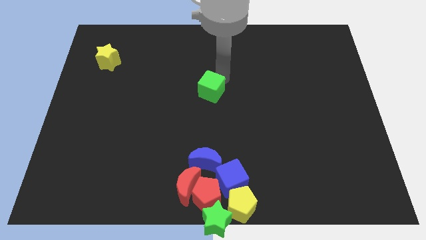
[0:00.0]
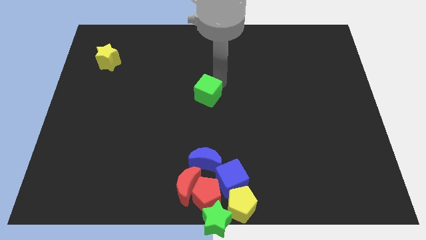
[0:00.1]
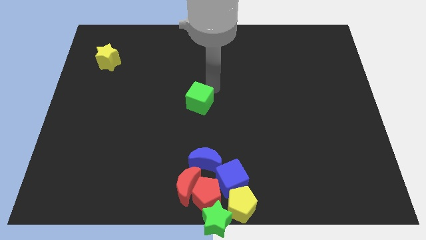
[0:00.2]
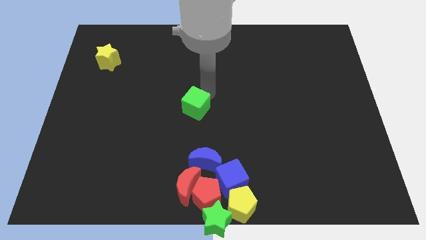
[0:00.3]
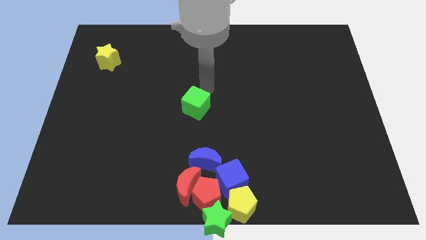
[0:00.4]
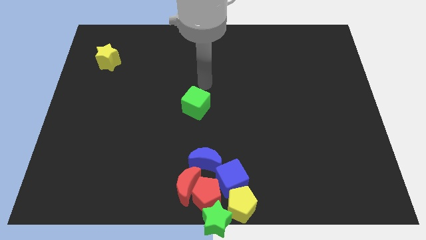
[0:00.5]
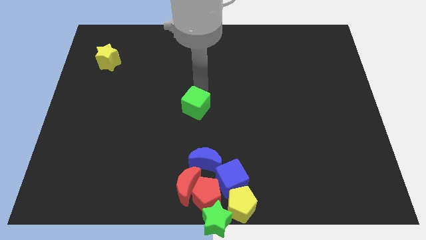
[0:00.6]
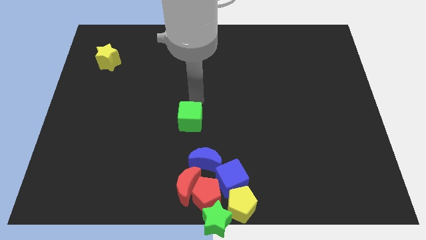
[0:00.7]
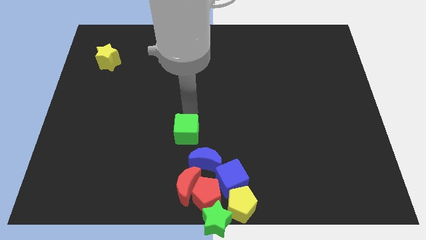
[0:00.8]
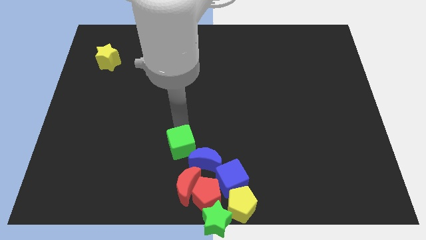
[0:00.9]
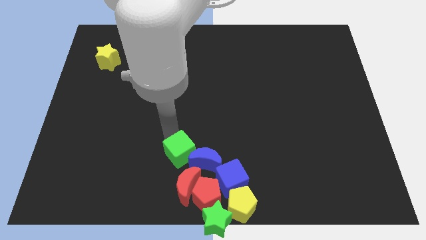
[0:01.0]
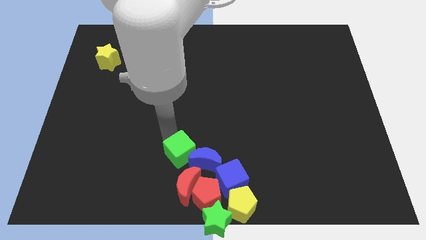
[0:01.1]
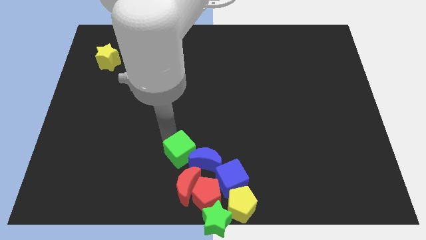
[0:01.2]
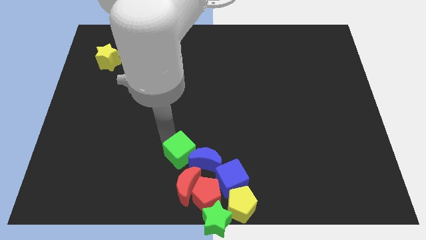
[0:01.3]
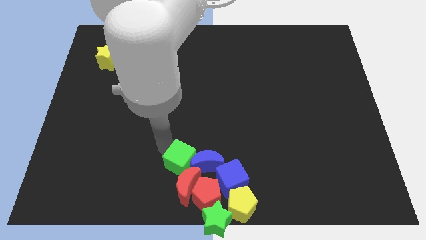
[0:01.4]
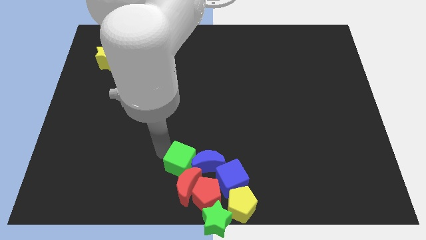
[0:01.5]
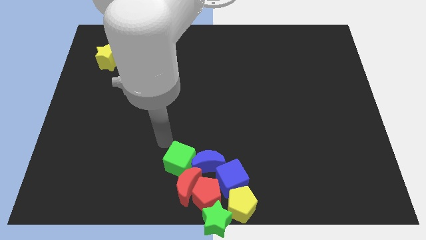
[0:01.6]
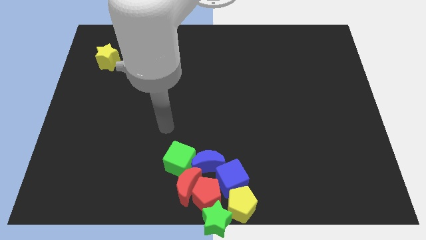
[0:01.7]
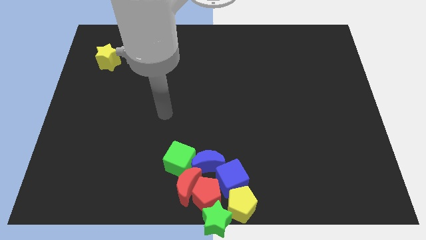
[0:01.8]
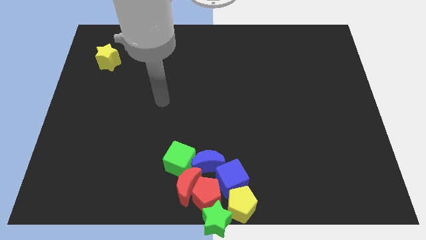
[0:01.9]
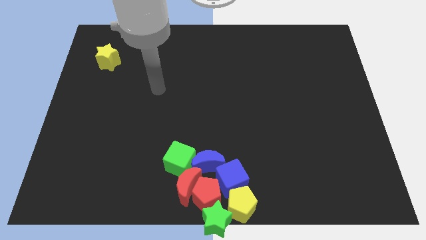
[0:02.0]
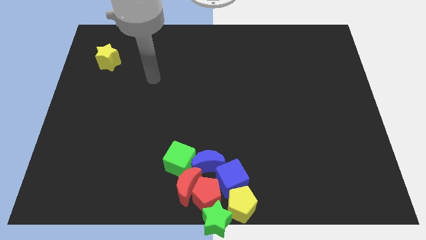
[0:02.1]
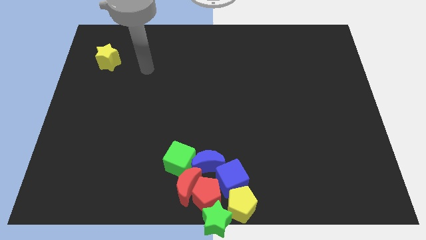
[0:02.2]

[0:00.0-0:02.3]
place a green cube close to the red and blue moon

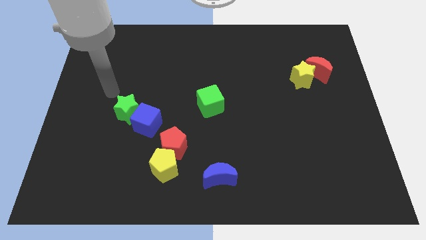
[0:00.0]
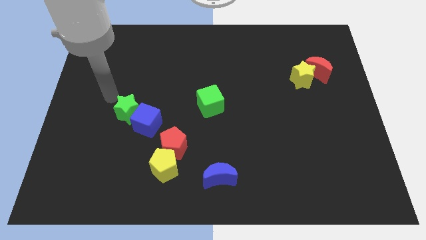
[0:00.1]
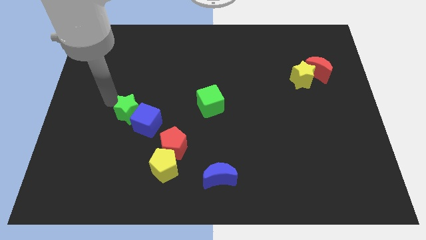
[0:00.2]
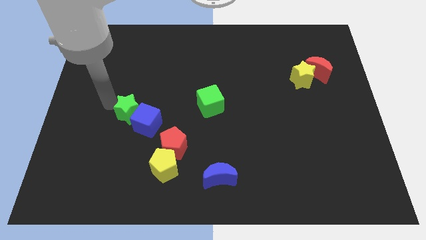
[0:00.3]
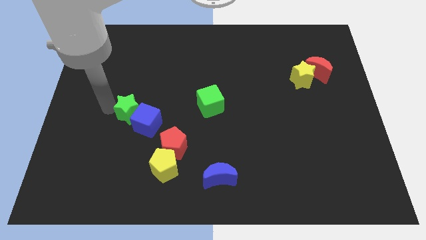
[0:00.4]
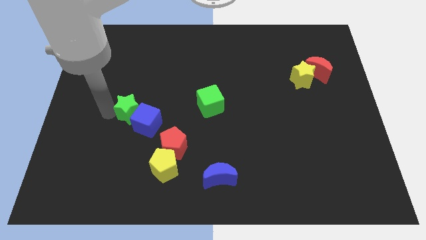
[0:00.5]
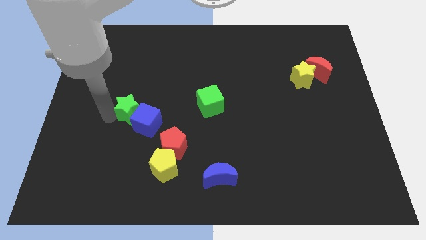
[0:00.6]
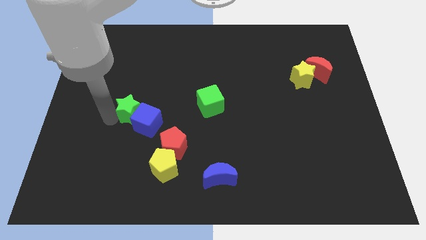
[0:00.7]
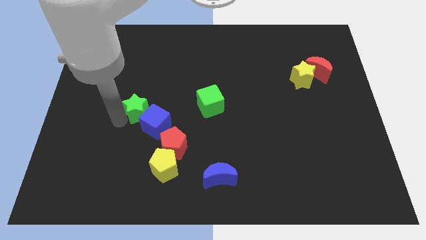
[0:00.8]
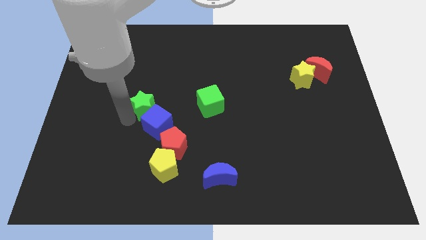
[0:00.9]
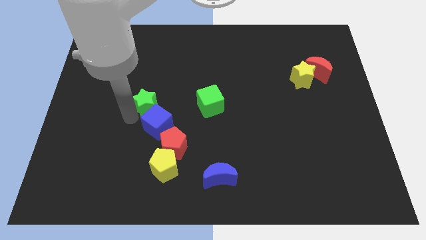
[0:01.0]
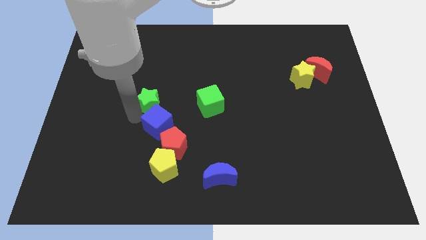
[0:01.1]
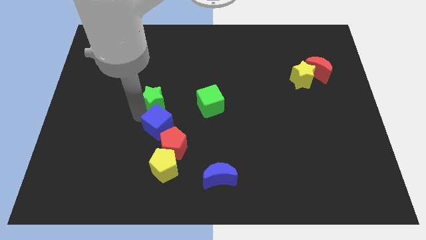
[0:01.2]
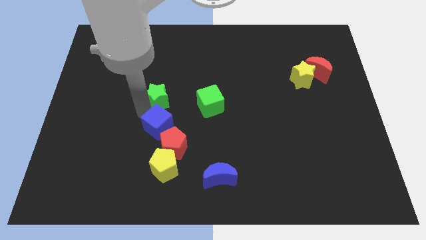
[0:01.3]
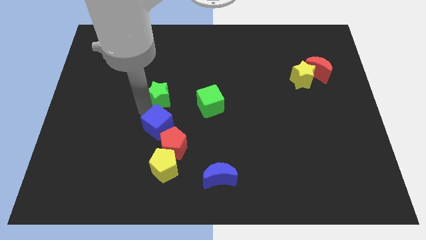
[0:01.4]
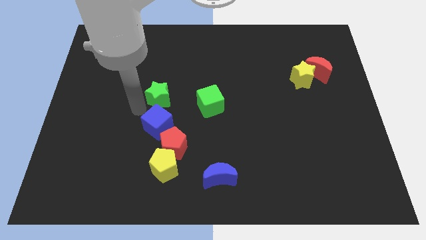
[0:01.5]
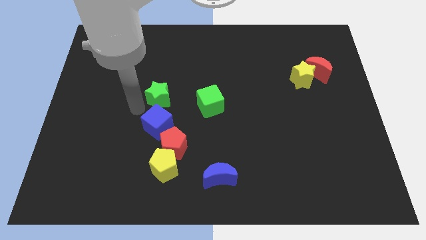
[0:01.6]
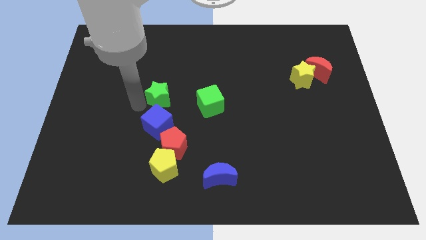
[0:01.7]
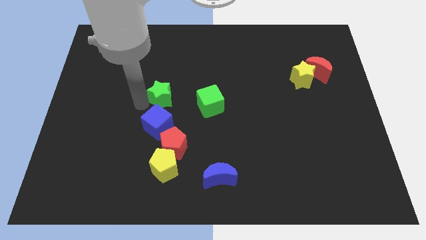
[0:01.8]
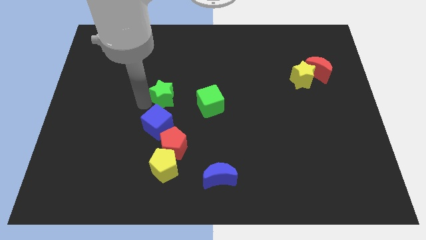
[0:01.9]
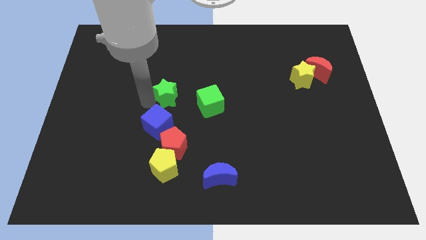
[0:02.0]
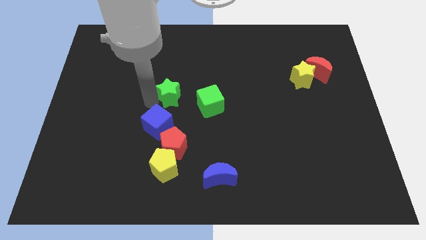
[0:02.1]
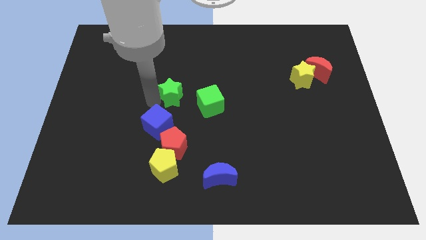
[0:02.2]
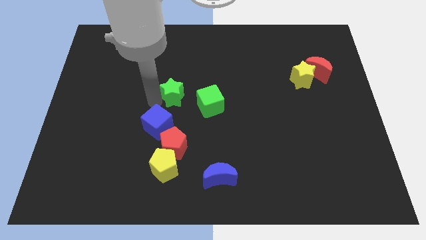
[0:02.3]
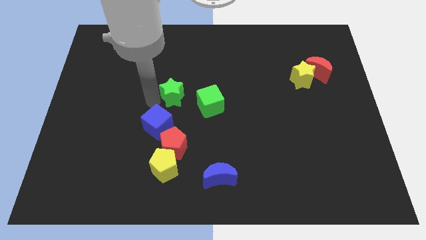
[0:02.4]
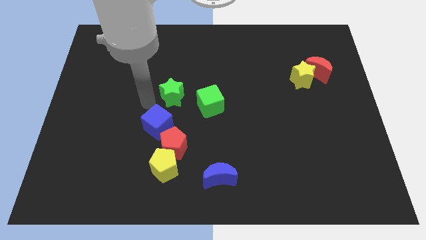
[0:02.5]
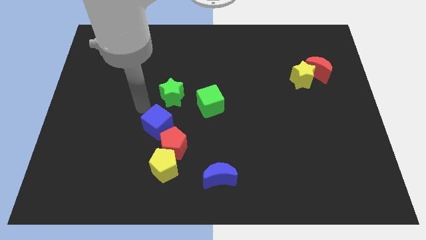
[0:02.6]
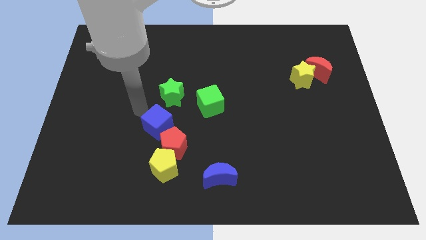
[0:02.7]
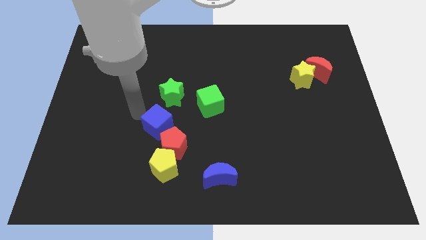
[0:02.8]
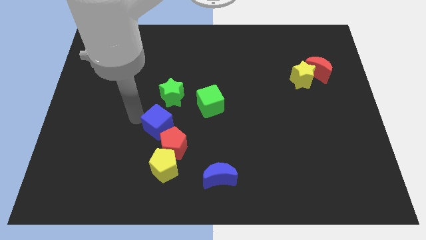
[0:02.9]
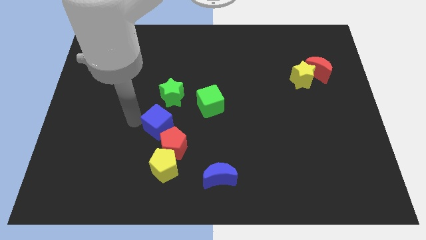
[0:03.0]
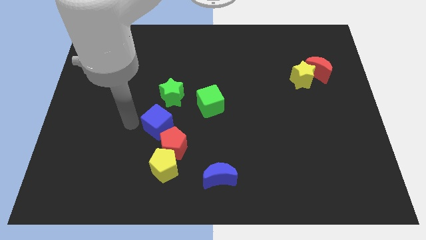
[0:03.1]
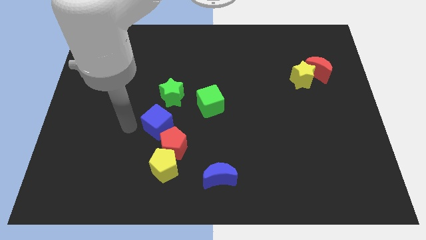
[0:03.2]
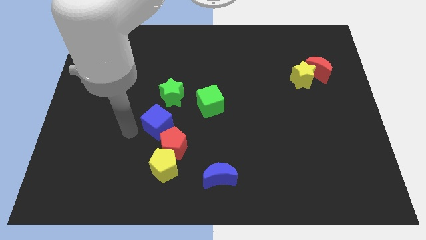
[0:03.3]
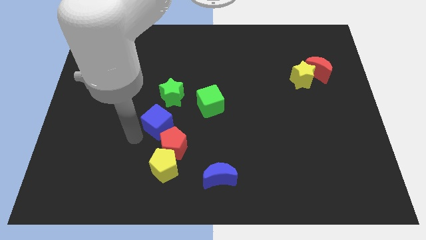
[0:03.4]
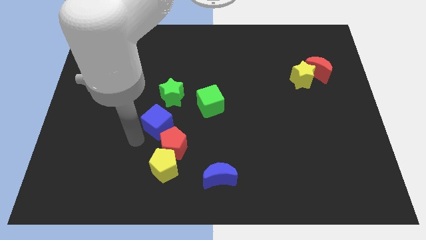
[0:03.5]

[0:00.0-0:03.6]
move the green star towards the top side

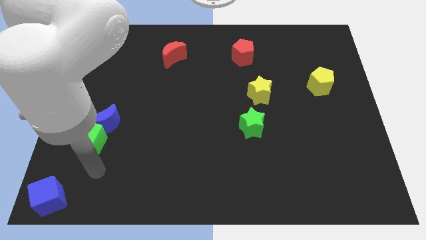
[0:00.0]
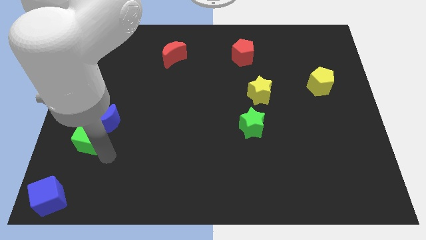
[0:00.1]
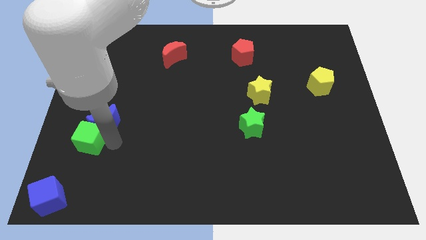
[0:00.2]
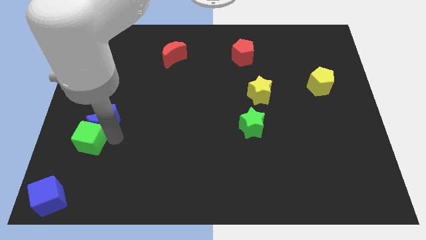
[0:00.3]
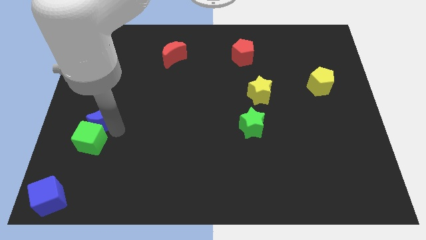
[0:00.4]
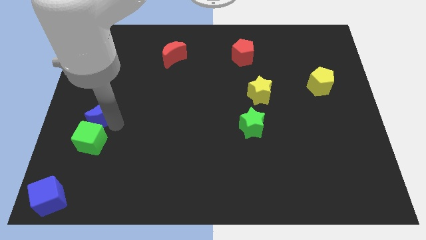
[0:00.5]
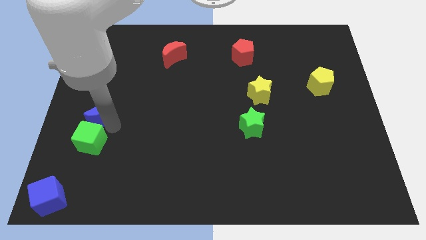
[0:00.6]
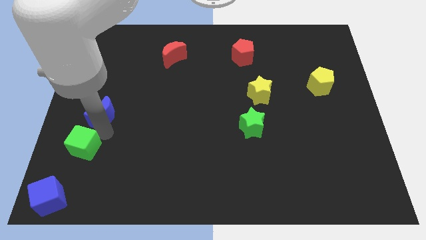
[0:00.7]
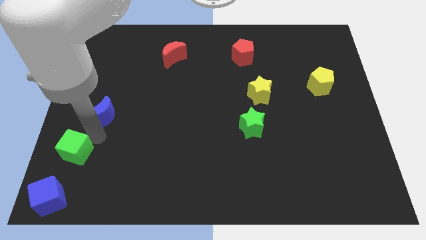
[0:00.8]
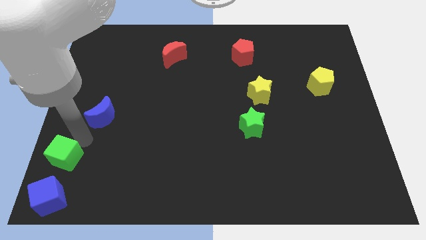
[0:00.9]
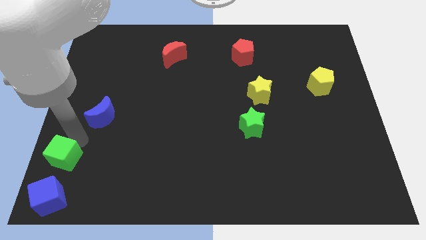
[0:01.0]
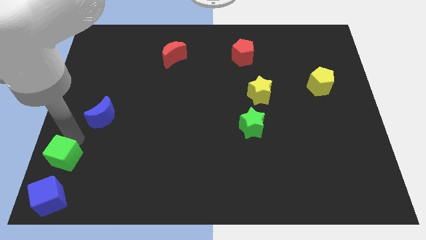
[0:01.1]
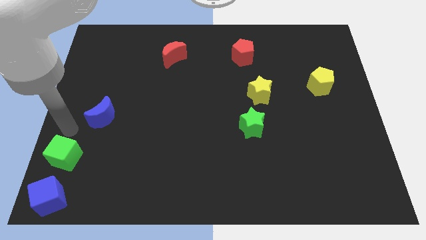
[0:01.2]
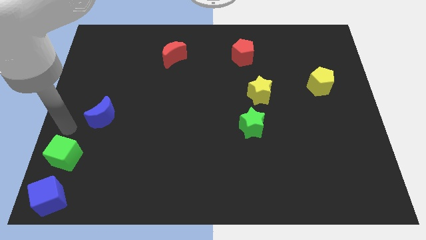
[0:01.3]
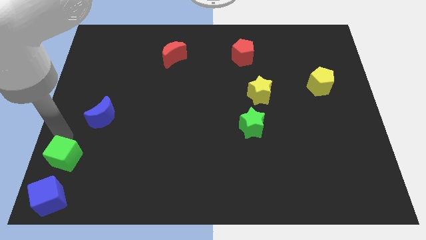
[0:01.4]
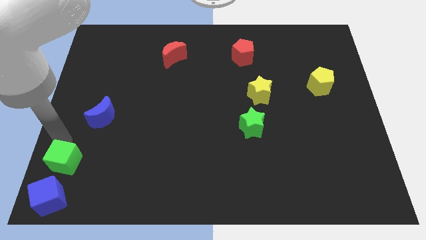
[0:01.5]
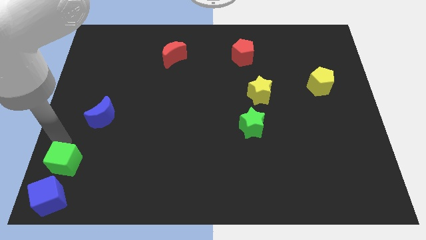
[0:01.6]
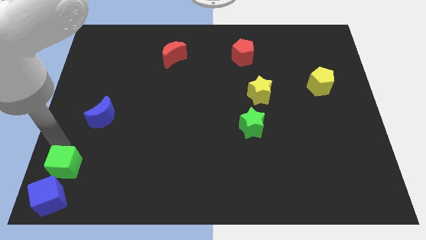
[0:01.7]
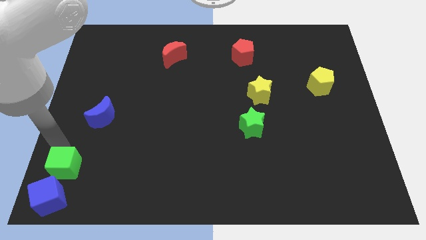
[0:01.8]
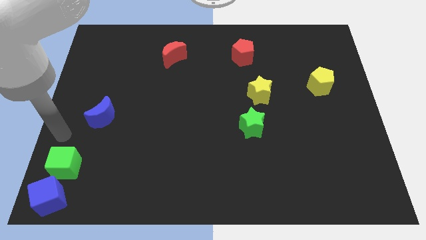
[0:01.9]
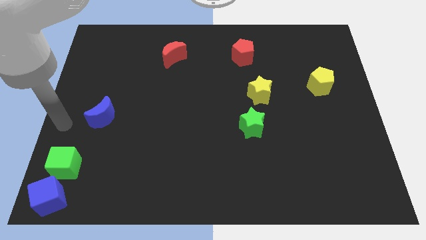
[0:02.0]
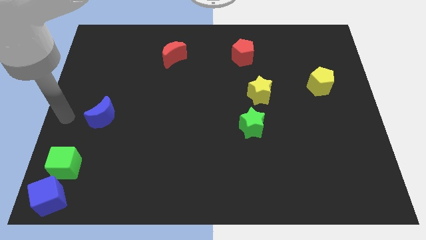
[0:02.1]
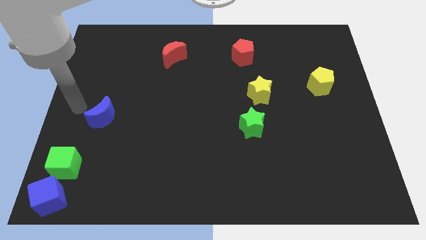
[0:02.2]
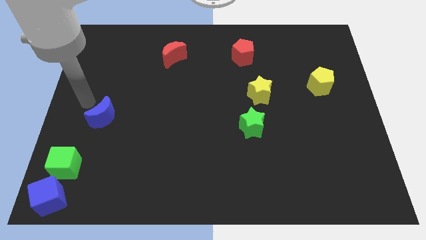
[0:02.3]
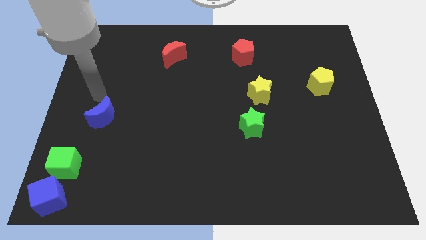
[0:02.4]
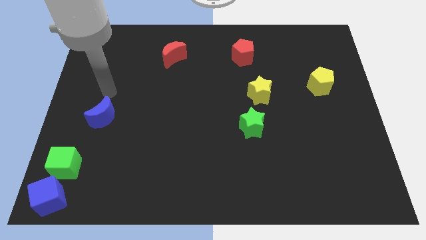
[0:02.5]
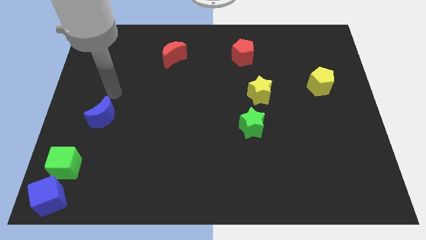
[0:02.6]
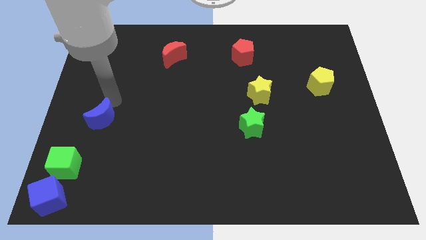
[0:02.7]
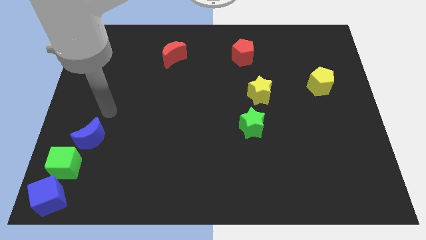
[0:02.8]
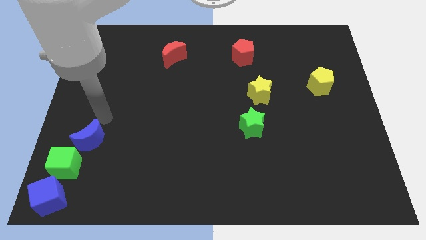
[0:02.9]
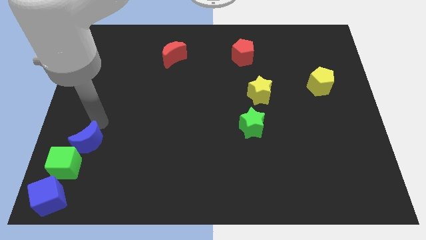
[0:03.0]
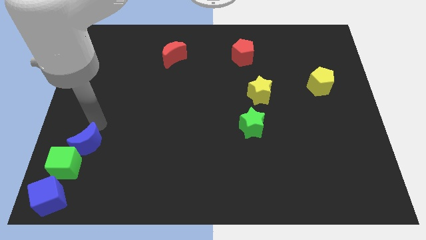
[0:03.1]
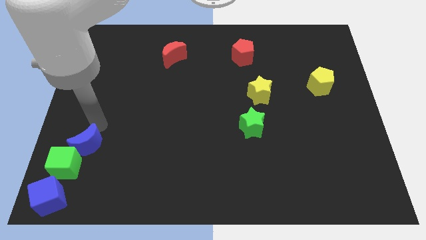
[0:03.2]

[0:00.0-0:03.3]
place green cube to the top right of the blue cube
